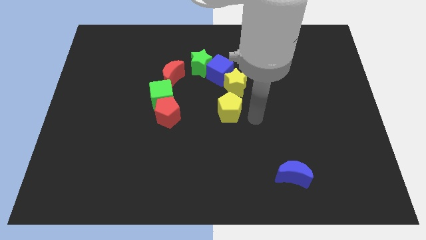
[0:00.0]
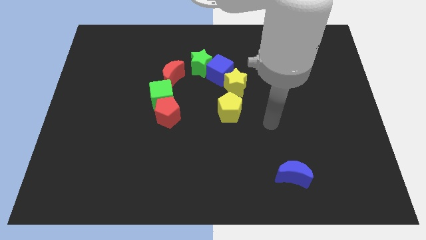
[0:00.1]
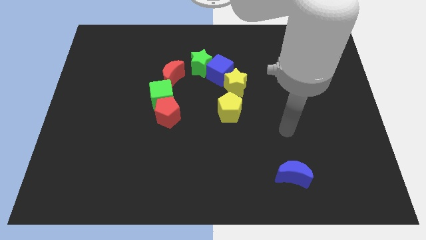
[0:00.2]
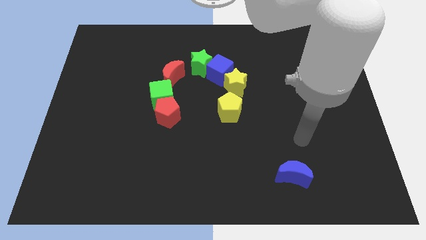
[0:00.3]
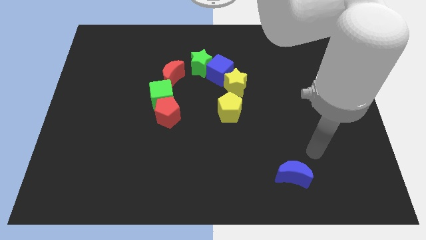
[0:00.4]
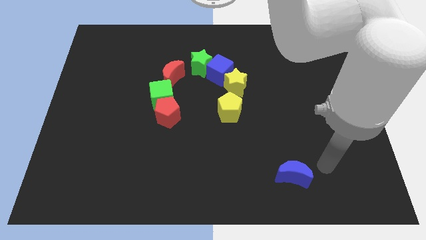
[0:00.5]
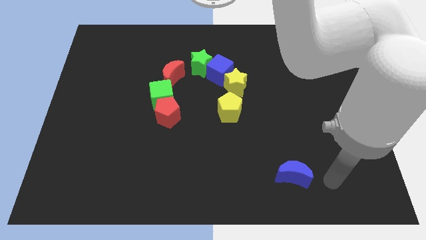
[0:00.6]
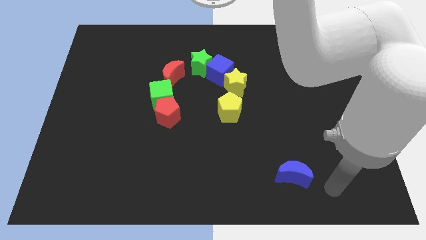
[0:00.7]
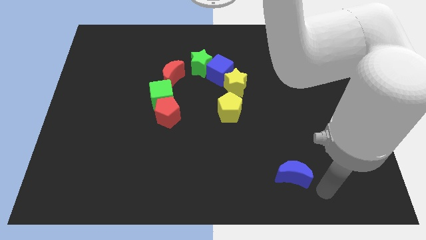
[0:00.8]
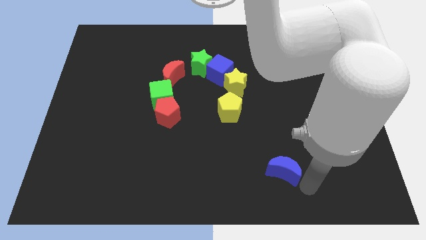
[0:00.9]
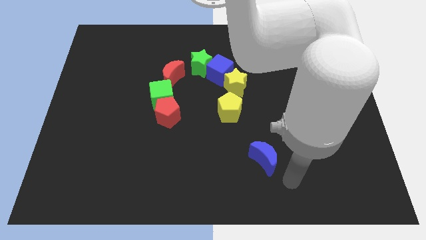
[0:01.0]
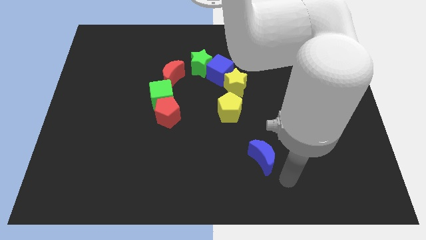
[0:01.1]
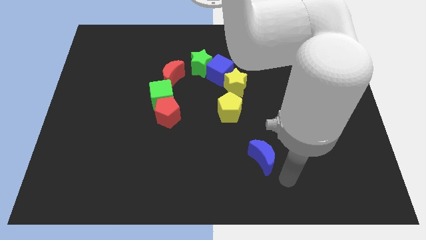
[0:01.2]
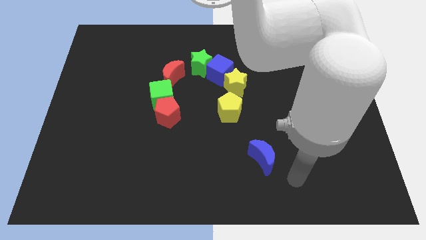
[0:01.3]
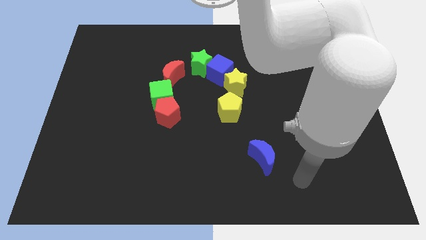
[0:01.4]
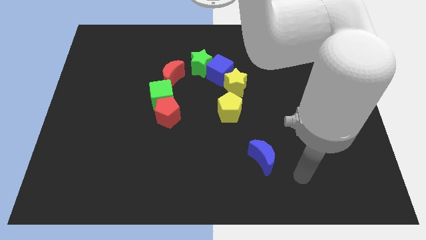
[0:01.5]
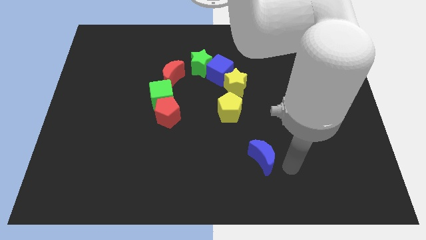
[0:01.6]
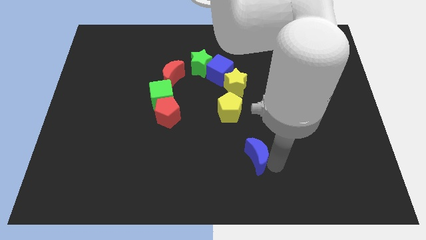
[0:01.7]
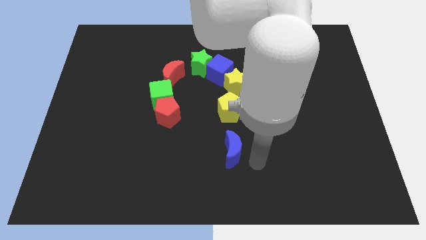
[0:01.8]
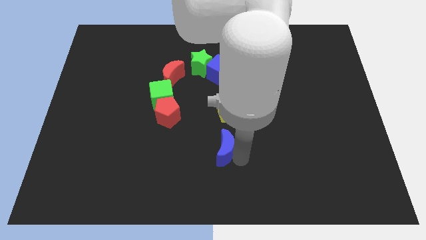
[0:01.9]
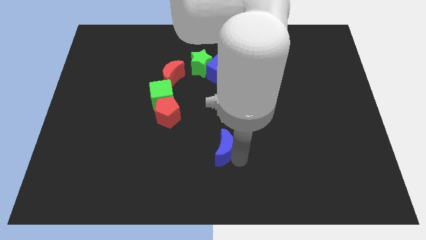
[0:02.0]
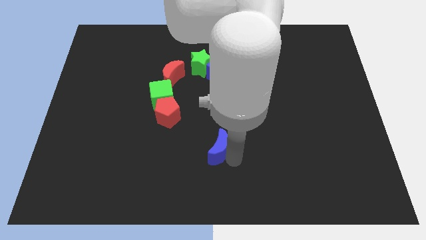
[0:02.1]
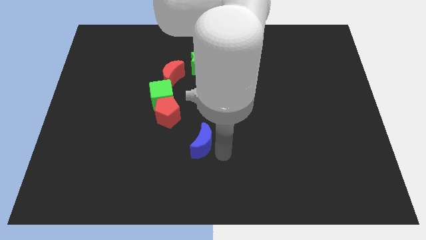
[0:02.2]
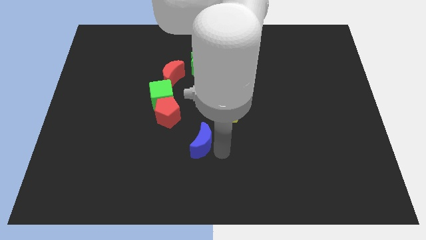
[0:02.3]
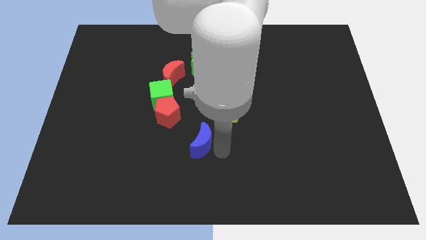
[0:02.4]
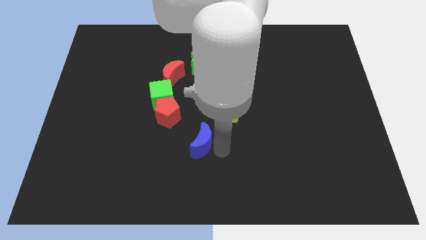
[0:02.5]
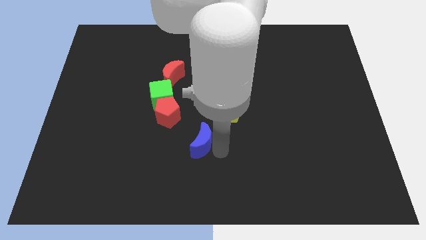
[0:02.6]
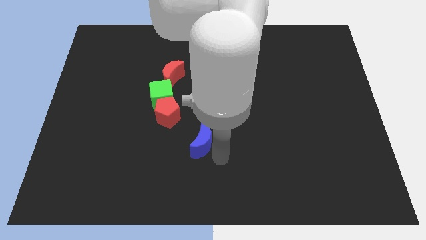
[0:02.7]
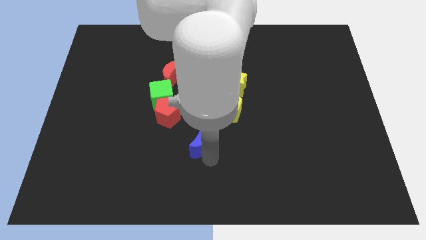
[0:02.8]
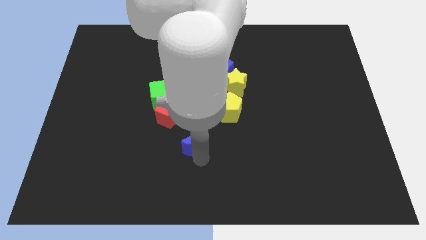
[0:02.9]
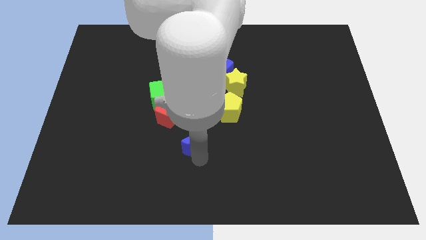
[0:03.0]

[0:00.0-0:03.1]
move the blue crescent to the bottom right of the red pentagon

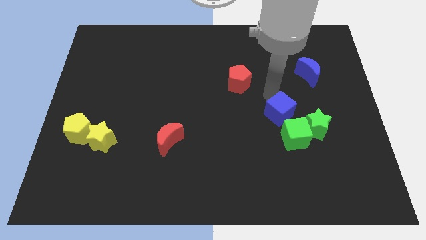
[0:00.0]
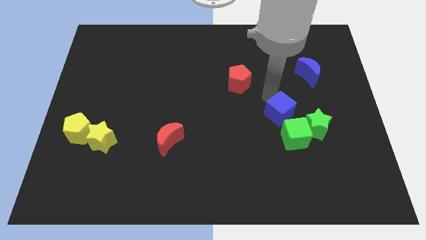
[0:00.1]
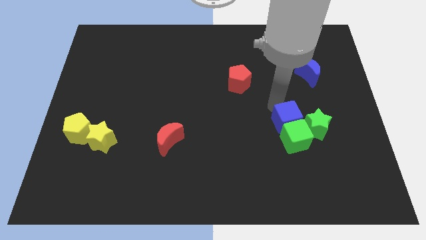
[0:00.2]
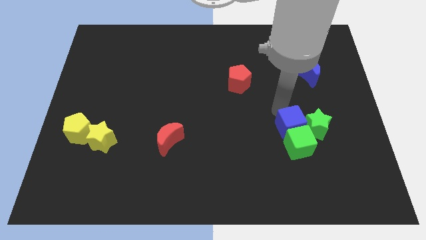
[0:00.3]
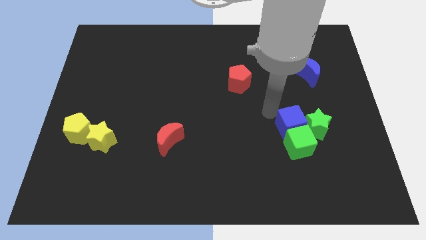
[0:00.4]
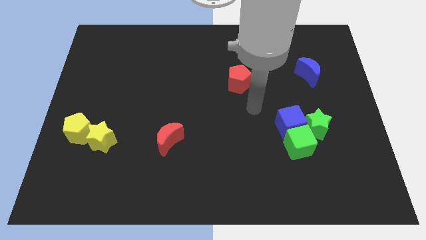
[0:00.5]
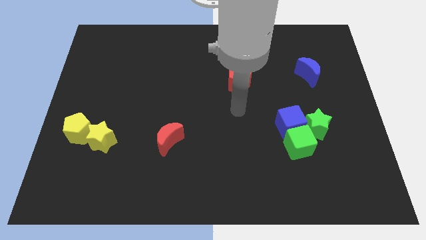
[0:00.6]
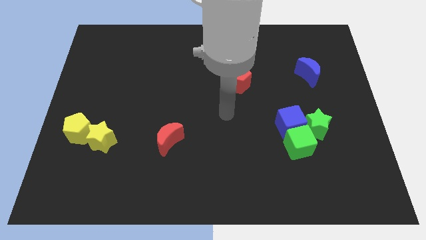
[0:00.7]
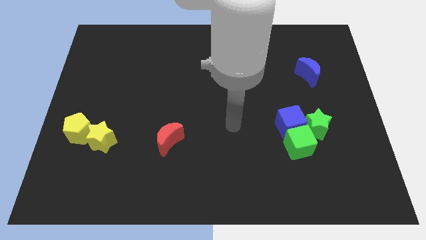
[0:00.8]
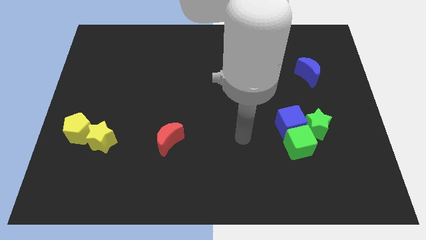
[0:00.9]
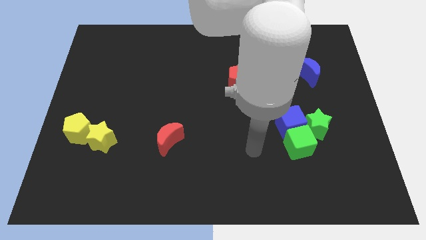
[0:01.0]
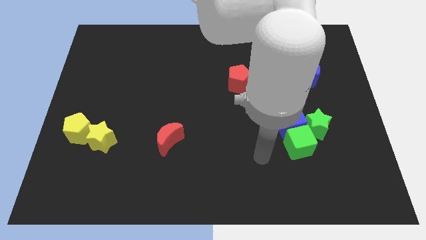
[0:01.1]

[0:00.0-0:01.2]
push the blue cube into the green cube

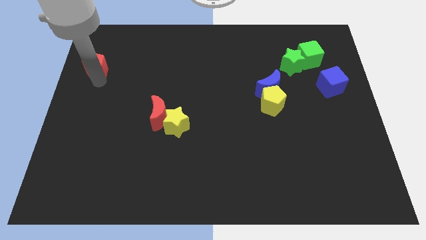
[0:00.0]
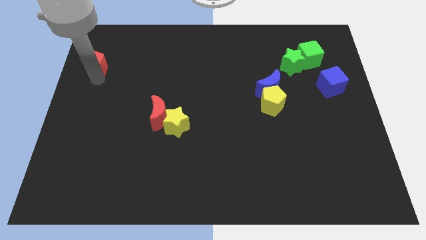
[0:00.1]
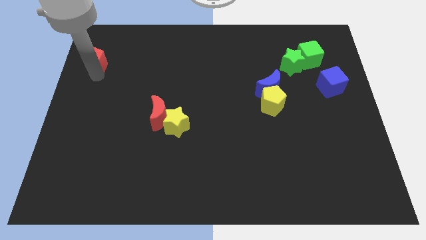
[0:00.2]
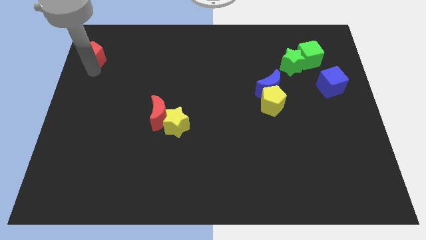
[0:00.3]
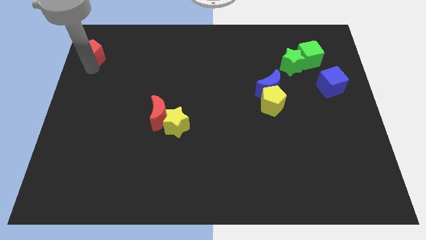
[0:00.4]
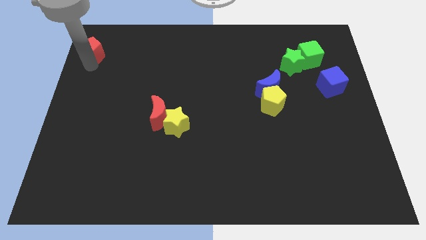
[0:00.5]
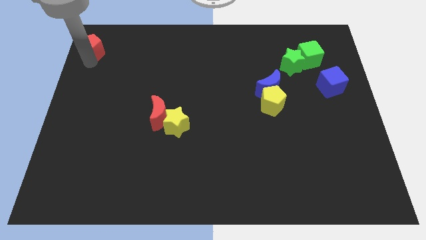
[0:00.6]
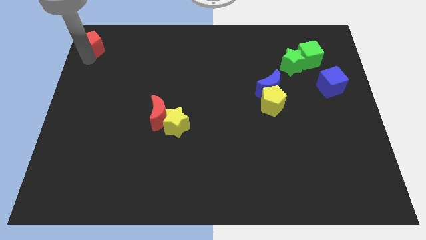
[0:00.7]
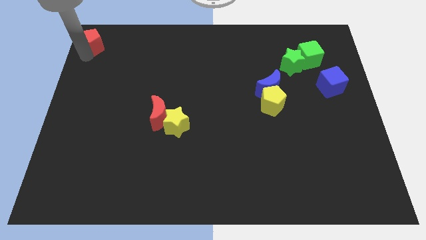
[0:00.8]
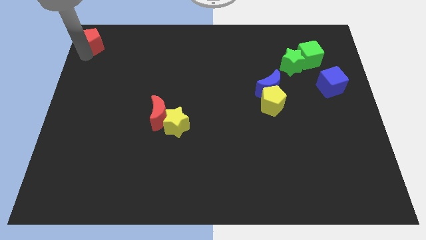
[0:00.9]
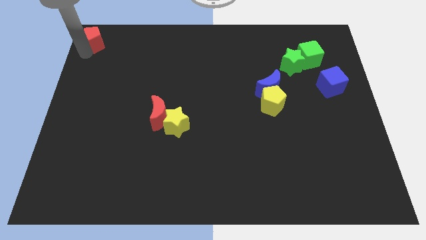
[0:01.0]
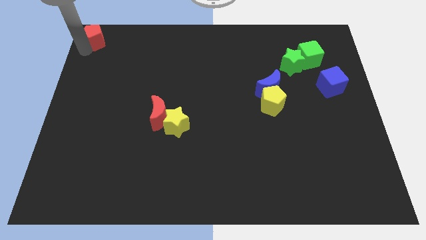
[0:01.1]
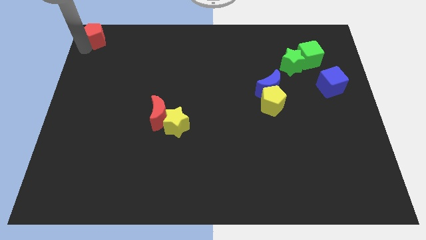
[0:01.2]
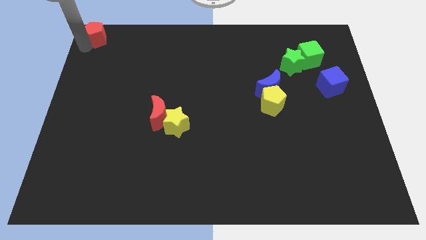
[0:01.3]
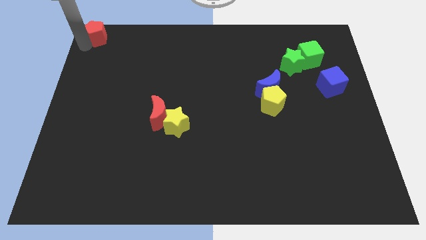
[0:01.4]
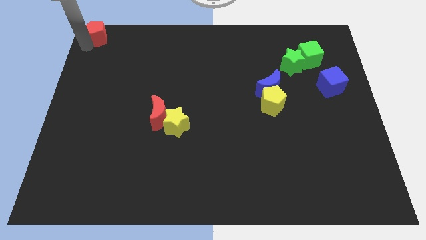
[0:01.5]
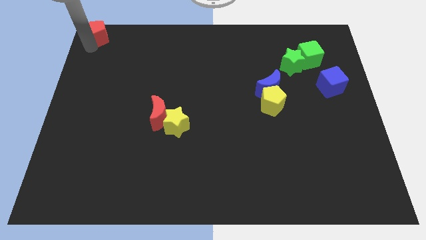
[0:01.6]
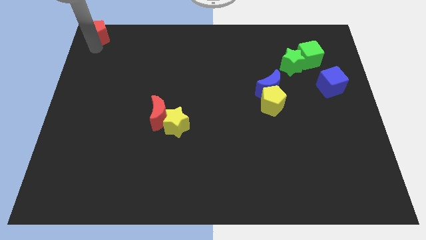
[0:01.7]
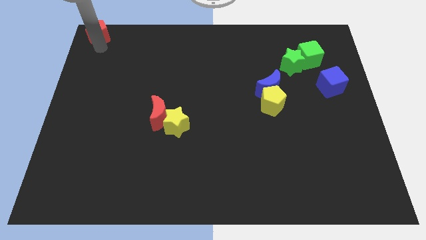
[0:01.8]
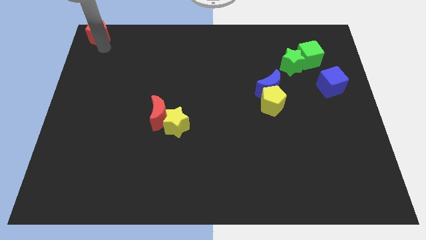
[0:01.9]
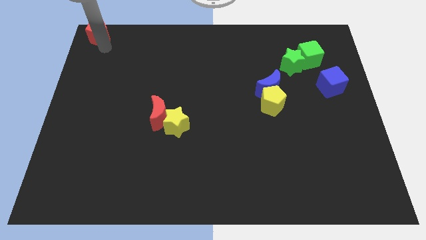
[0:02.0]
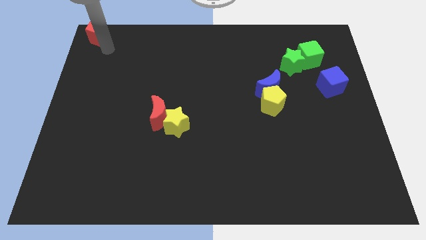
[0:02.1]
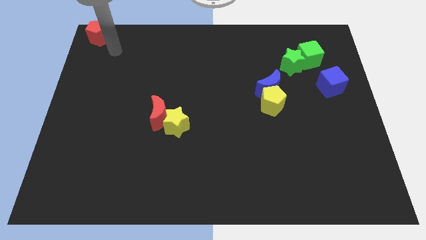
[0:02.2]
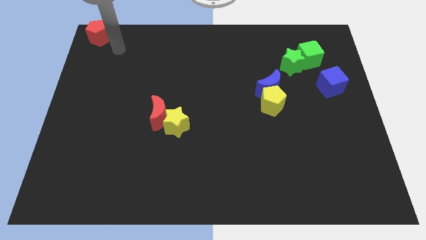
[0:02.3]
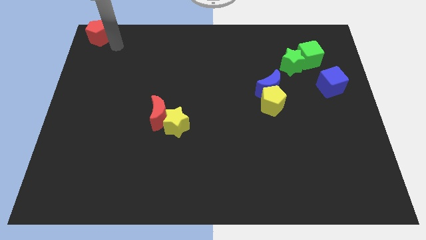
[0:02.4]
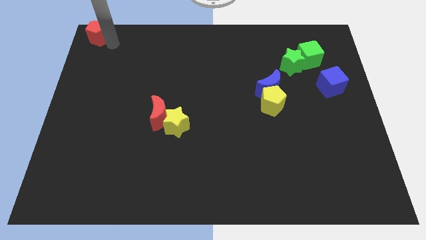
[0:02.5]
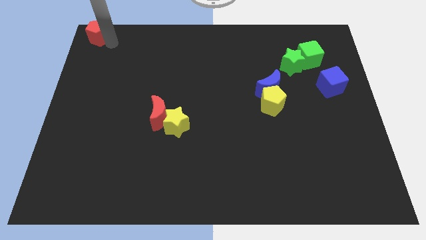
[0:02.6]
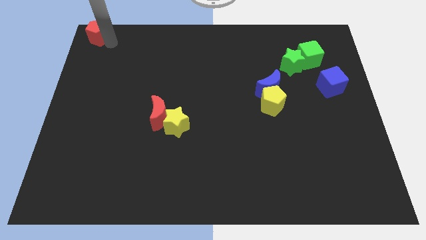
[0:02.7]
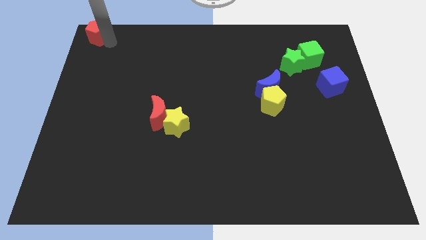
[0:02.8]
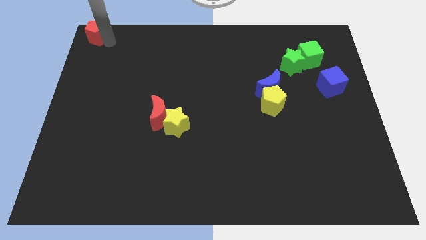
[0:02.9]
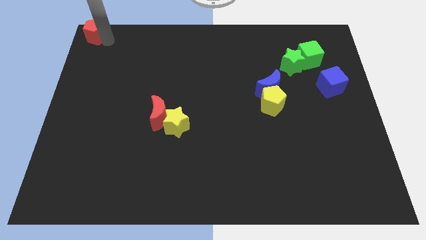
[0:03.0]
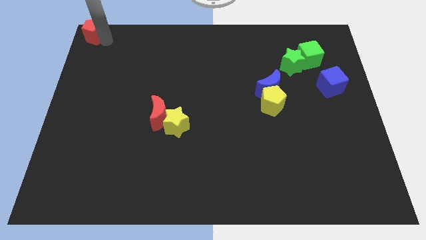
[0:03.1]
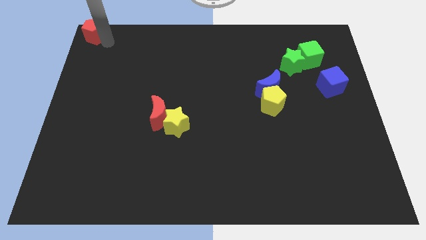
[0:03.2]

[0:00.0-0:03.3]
place the red pentagon at top left corner of the board

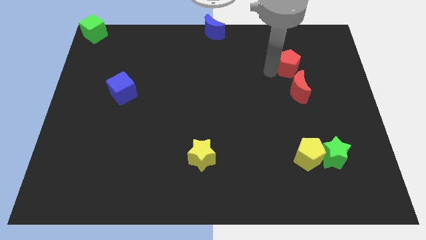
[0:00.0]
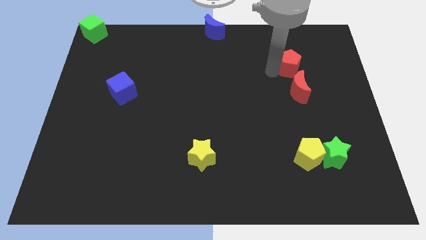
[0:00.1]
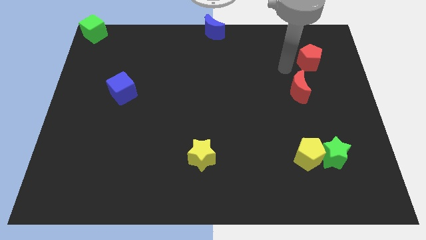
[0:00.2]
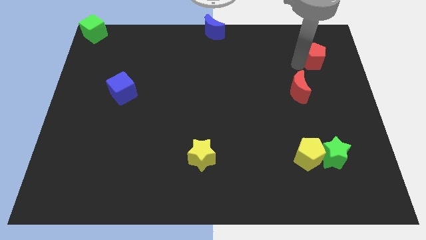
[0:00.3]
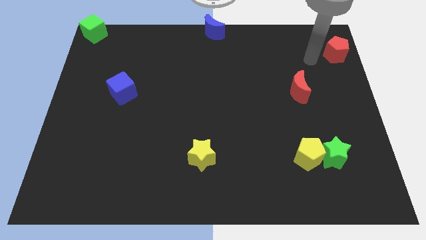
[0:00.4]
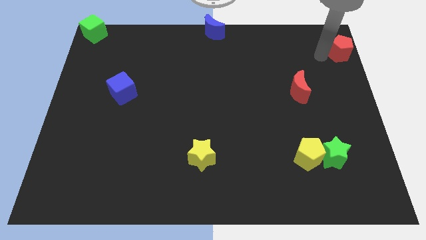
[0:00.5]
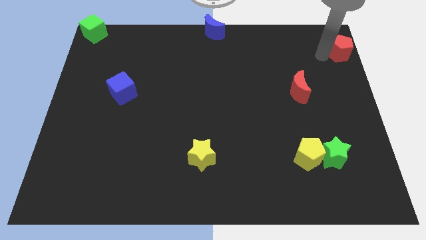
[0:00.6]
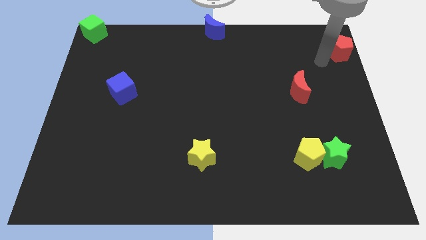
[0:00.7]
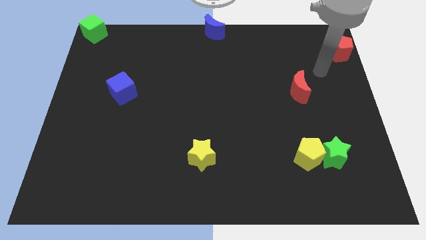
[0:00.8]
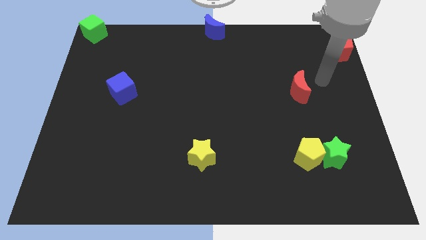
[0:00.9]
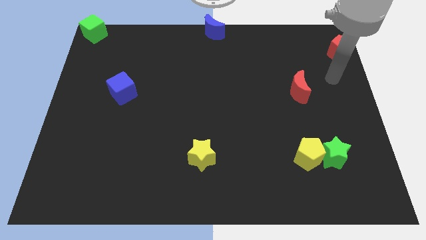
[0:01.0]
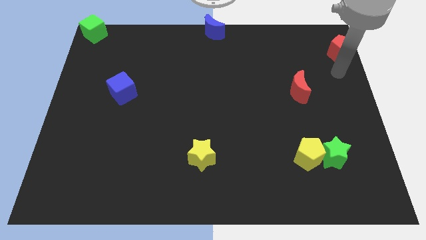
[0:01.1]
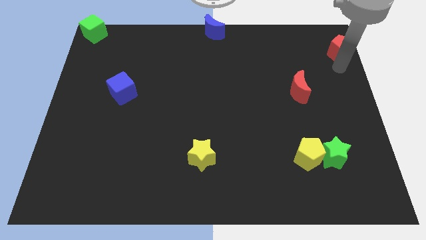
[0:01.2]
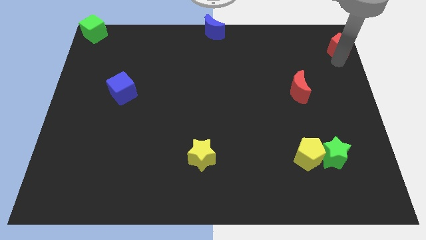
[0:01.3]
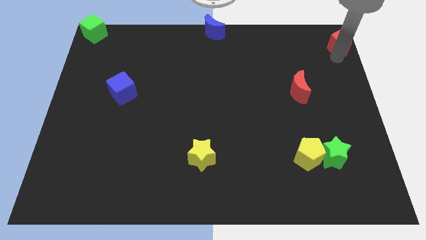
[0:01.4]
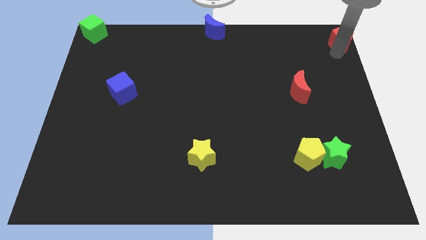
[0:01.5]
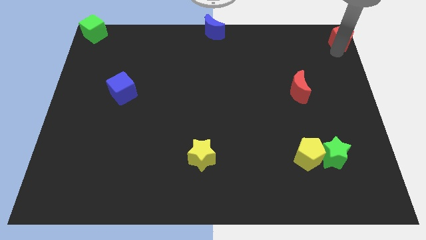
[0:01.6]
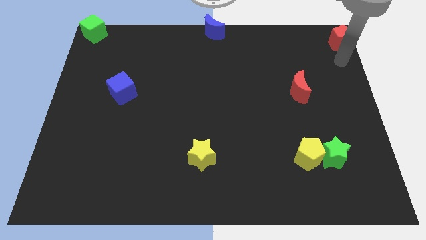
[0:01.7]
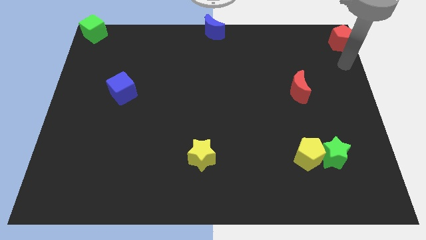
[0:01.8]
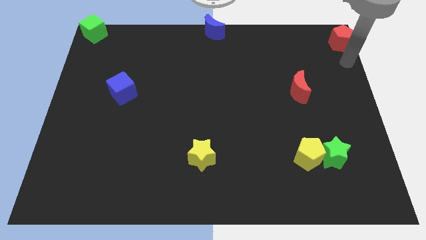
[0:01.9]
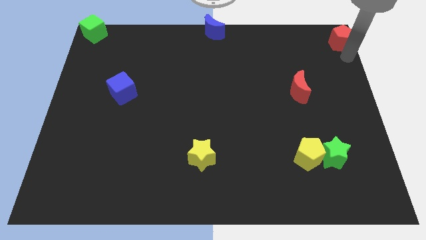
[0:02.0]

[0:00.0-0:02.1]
move red pentagon to the top right corner of the board
